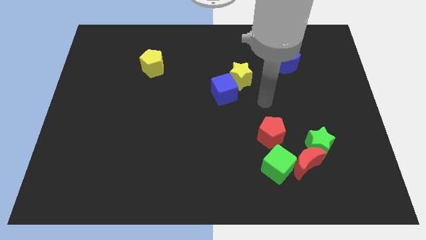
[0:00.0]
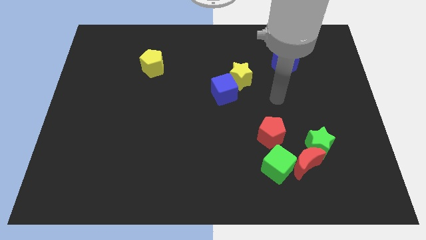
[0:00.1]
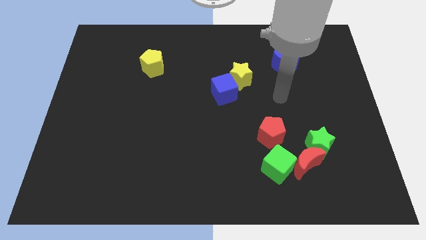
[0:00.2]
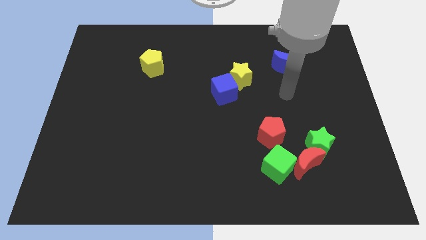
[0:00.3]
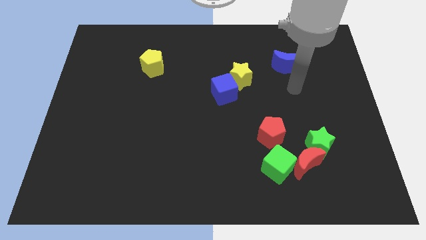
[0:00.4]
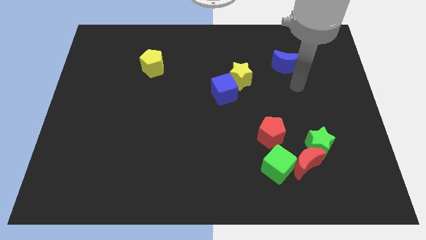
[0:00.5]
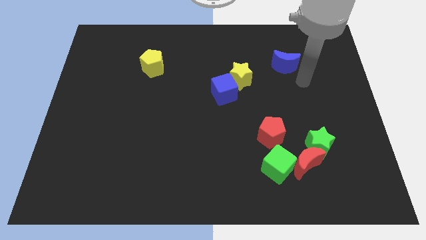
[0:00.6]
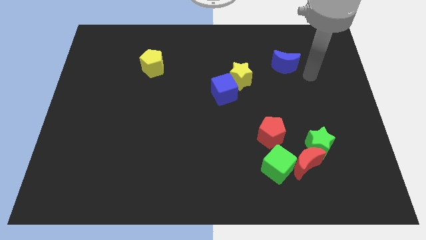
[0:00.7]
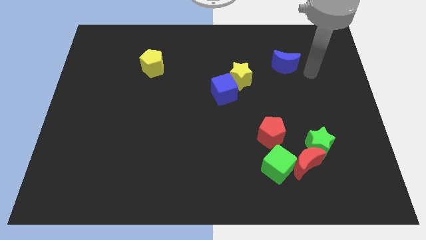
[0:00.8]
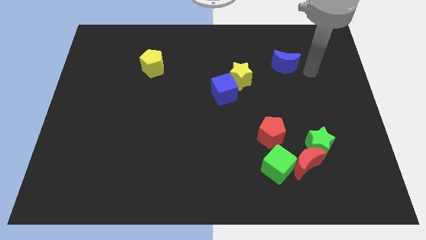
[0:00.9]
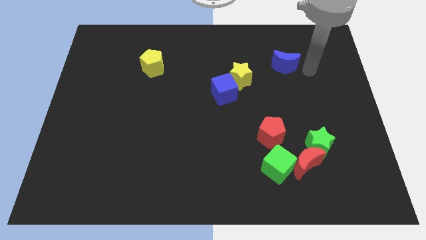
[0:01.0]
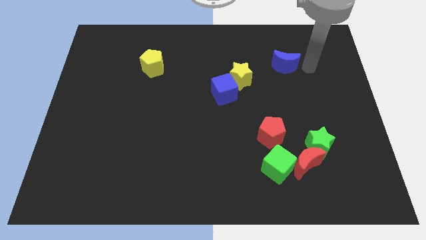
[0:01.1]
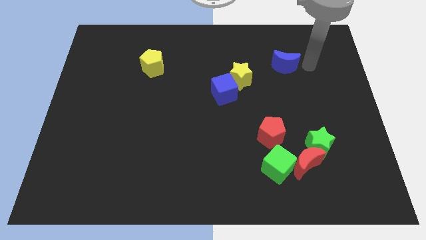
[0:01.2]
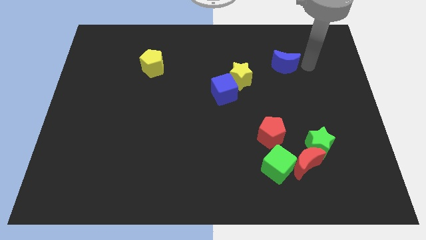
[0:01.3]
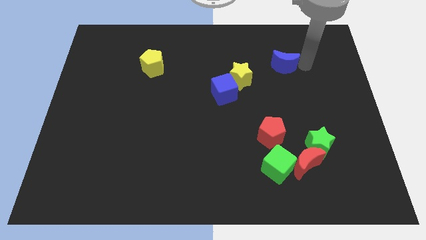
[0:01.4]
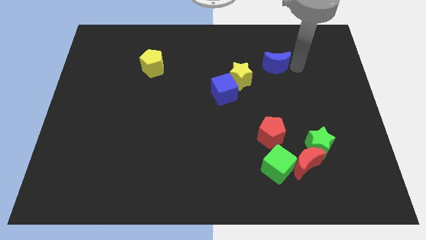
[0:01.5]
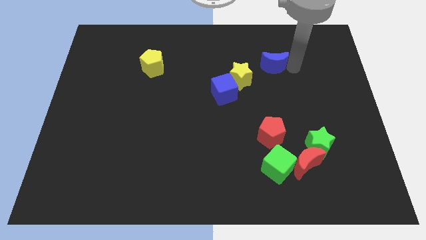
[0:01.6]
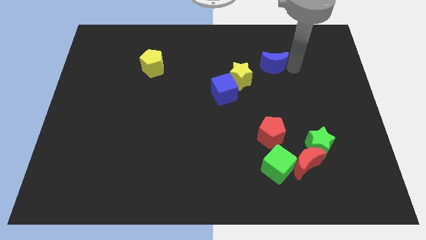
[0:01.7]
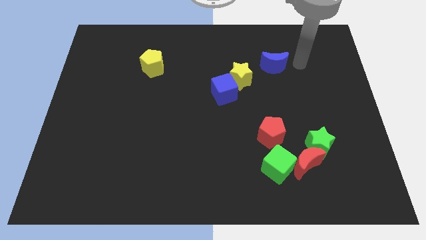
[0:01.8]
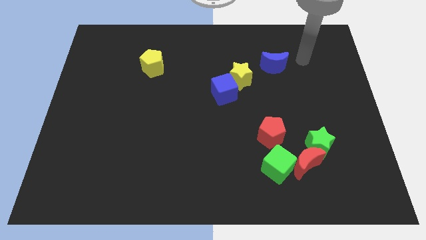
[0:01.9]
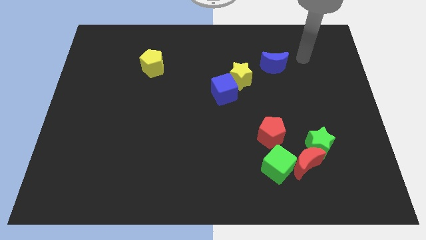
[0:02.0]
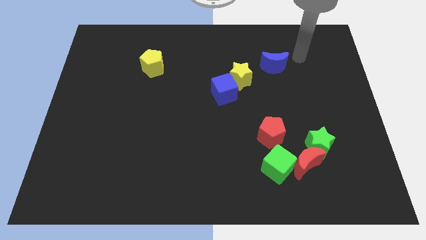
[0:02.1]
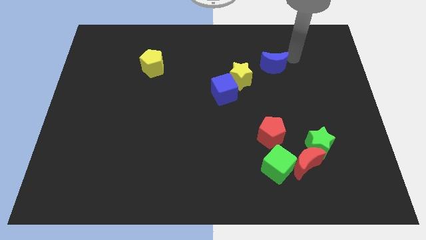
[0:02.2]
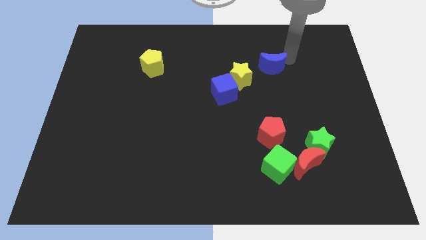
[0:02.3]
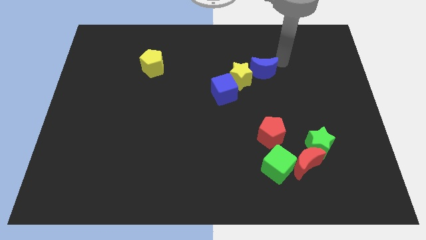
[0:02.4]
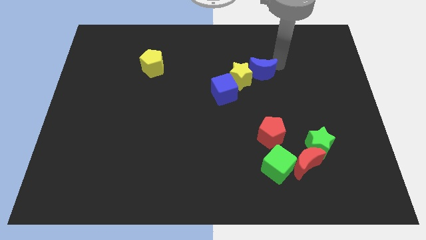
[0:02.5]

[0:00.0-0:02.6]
place the blue half moon diagonally to the top right of the yellow star

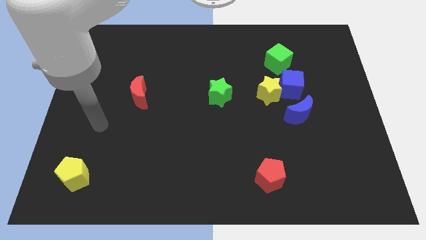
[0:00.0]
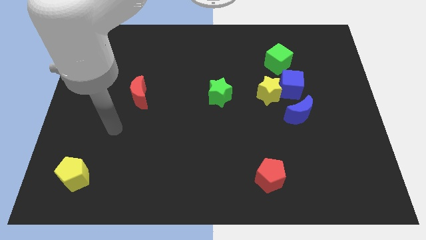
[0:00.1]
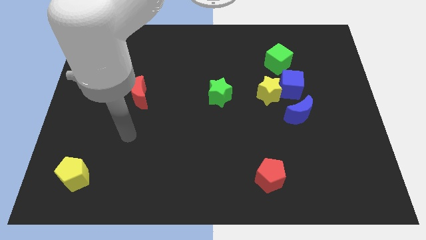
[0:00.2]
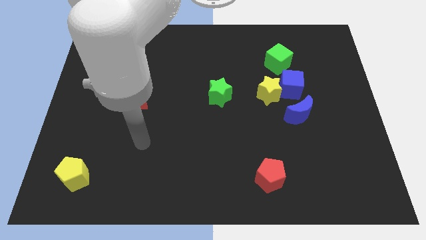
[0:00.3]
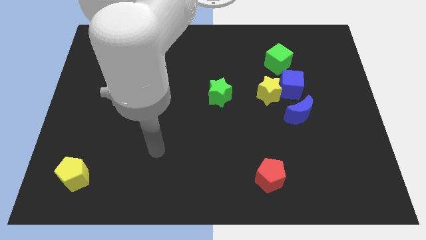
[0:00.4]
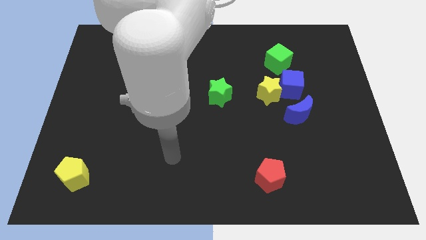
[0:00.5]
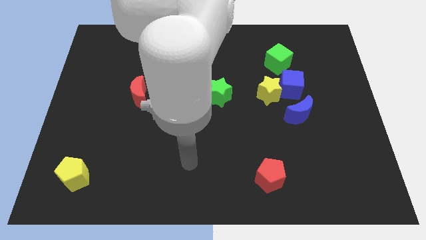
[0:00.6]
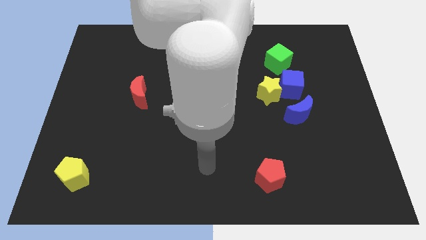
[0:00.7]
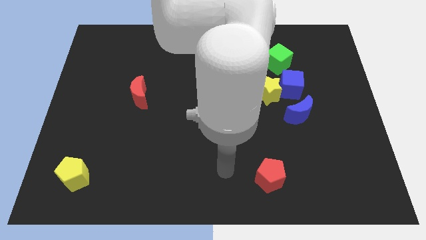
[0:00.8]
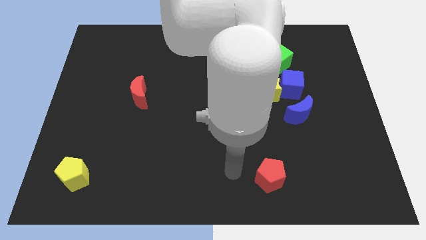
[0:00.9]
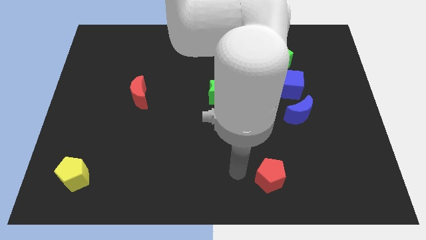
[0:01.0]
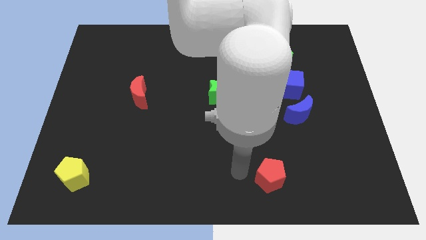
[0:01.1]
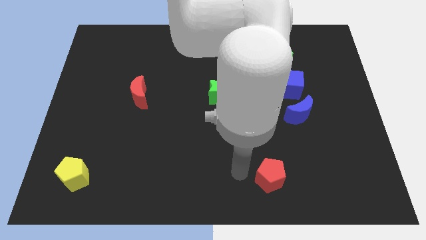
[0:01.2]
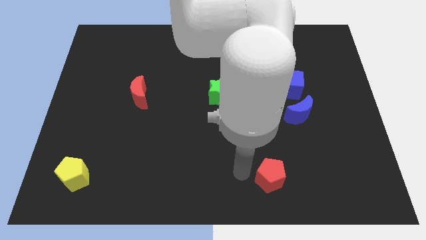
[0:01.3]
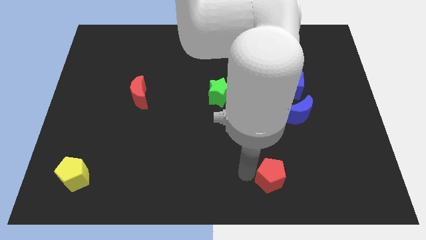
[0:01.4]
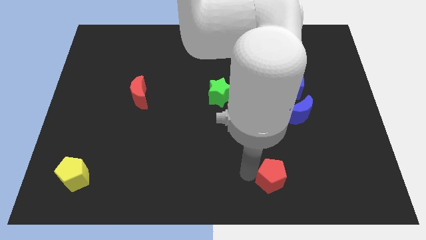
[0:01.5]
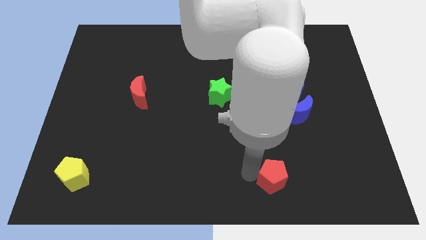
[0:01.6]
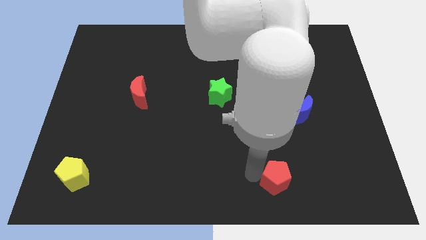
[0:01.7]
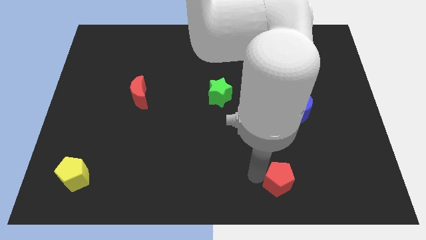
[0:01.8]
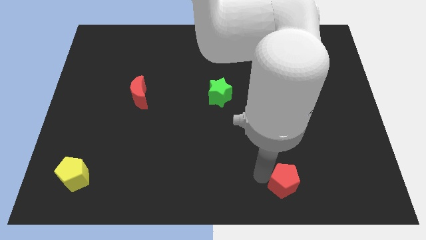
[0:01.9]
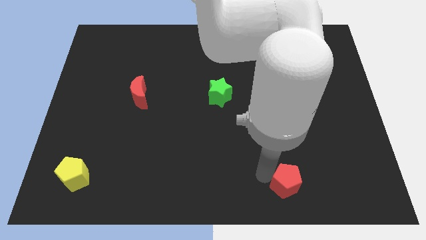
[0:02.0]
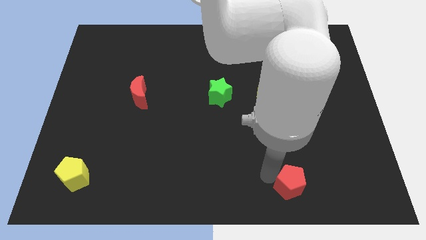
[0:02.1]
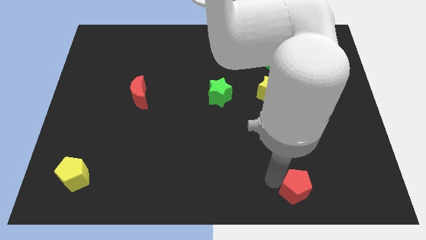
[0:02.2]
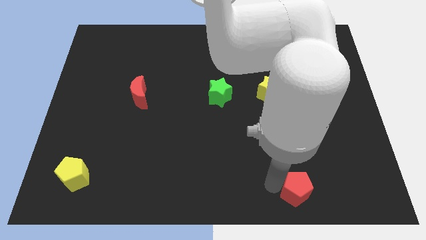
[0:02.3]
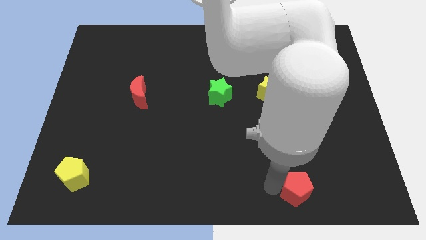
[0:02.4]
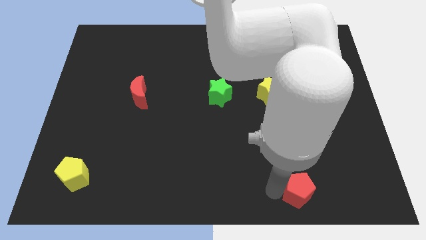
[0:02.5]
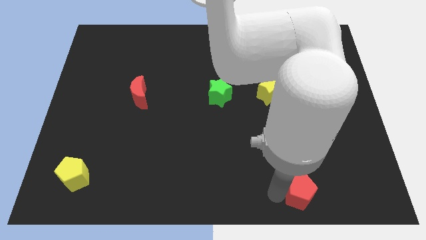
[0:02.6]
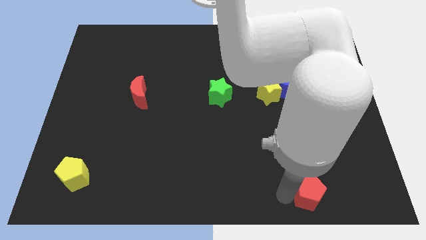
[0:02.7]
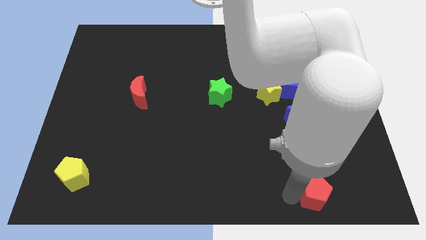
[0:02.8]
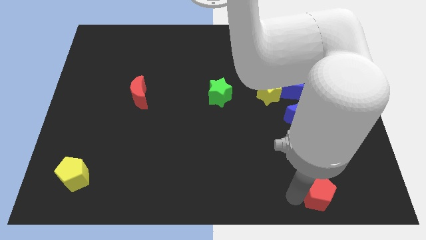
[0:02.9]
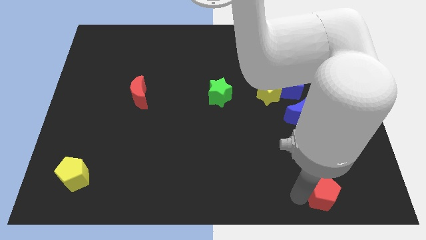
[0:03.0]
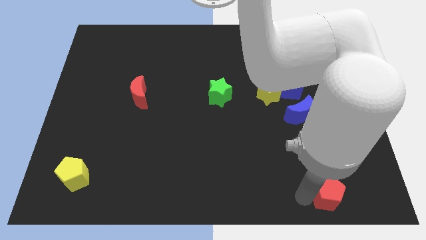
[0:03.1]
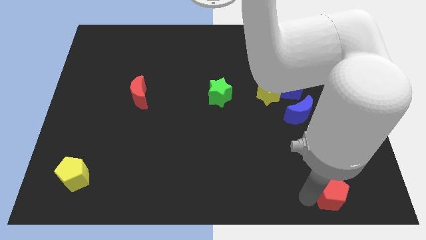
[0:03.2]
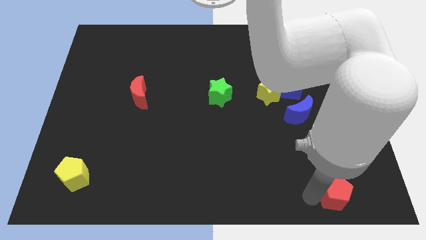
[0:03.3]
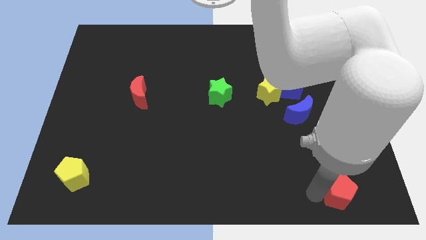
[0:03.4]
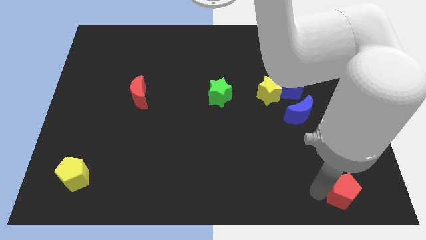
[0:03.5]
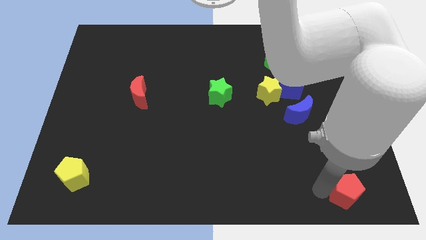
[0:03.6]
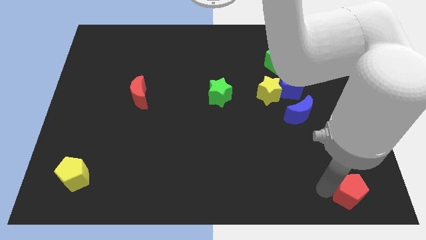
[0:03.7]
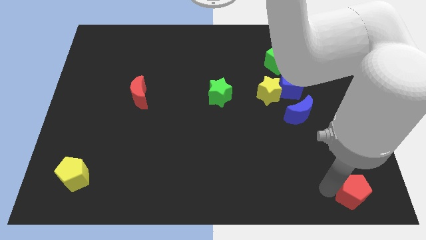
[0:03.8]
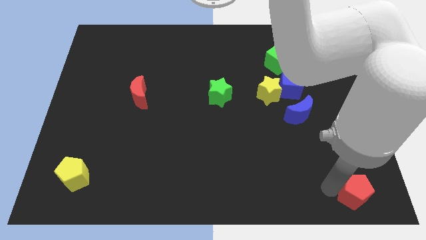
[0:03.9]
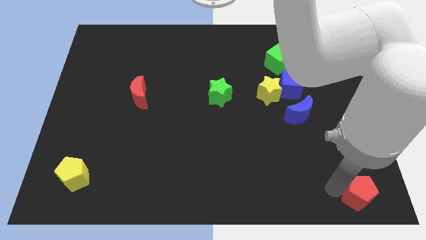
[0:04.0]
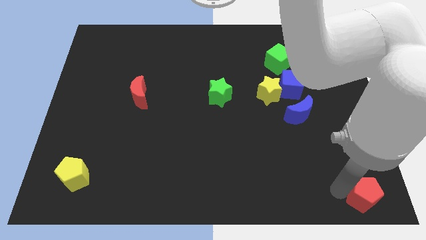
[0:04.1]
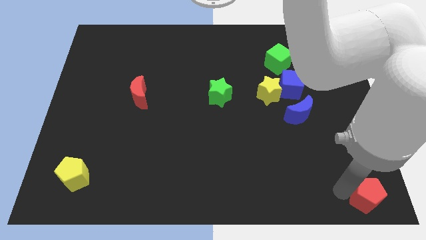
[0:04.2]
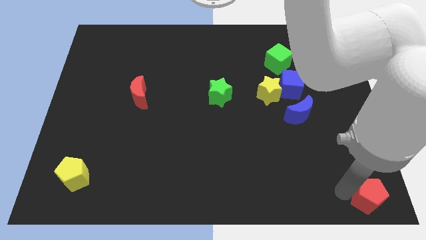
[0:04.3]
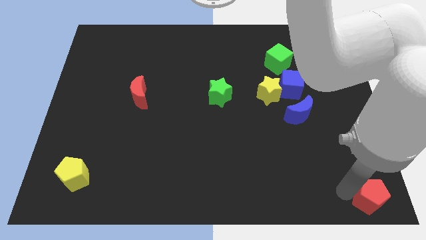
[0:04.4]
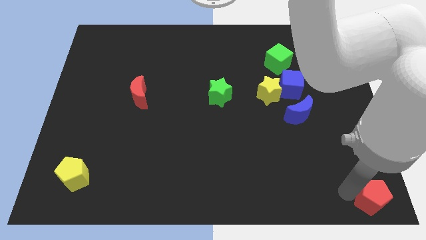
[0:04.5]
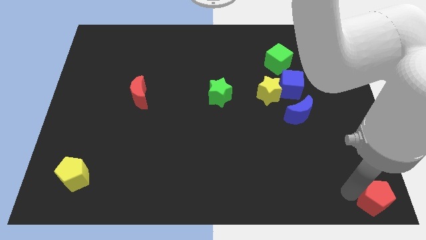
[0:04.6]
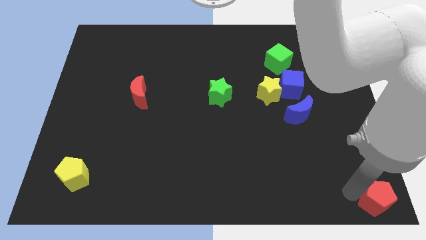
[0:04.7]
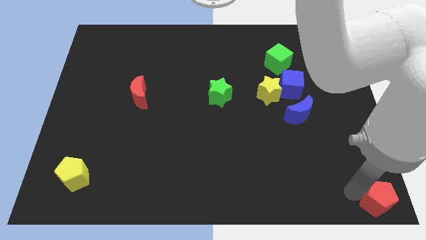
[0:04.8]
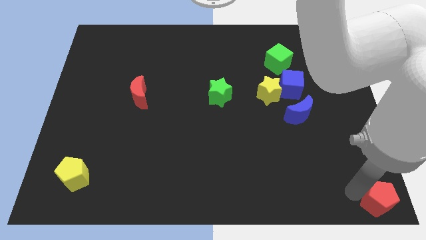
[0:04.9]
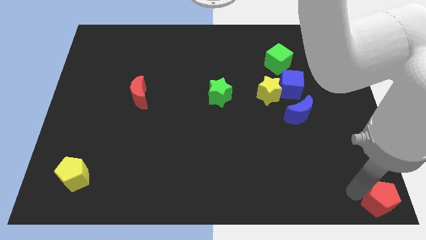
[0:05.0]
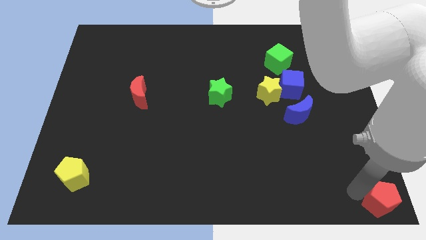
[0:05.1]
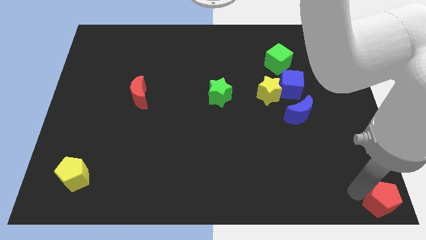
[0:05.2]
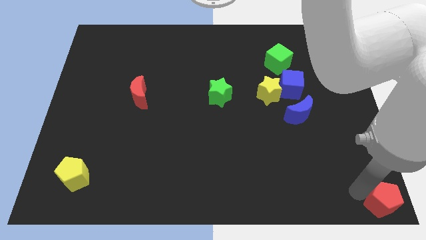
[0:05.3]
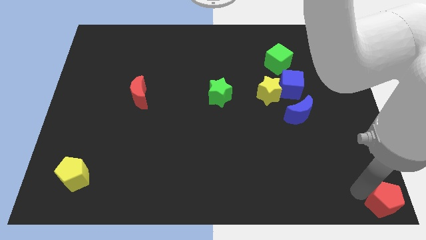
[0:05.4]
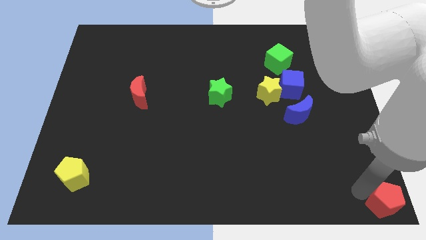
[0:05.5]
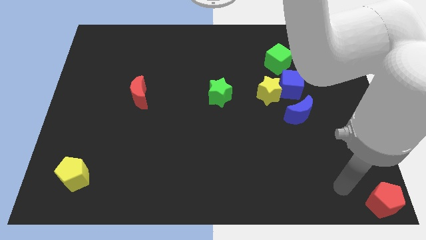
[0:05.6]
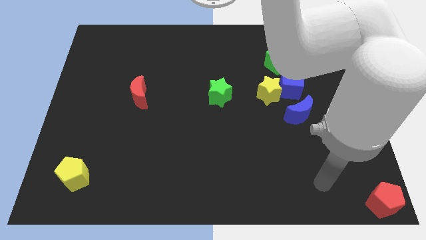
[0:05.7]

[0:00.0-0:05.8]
place the red pentagon to the bottom right corner of the board

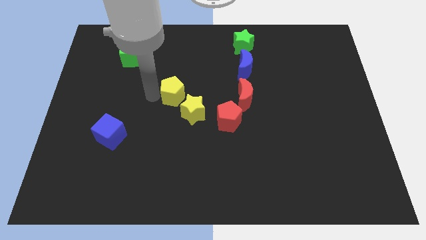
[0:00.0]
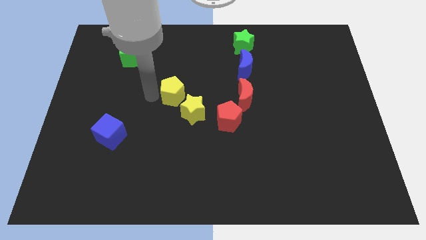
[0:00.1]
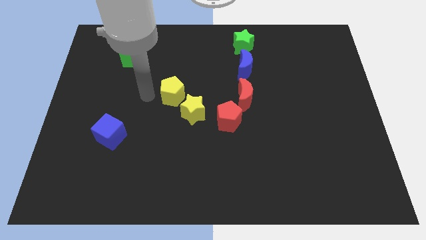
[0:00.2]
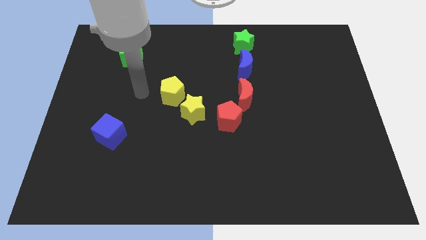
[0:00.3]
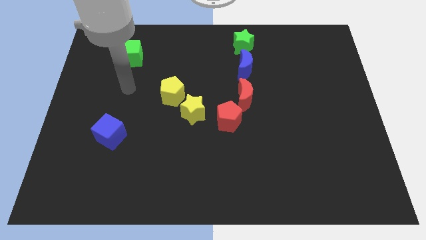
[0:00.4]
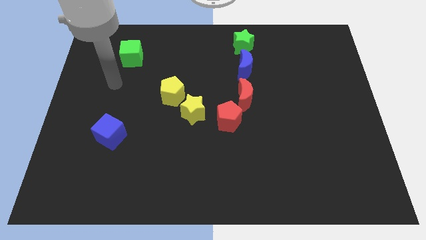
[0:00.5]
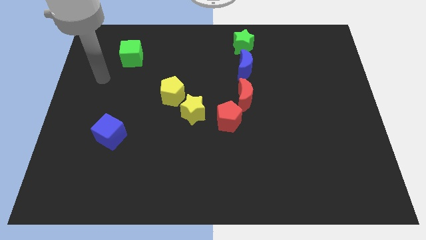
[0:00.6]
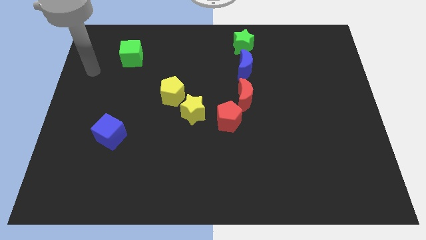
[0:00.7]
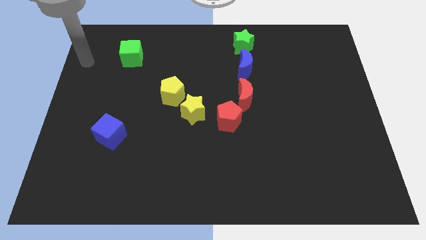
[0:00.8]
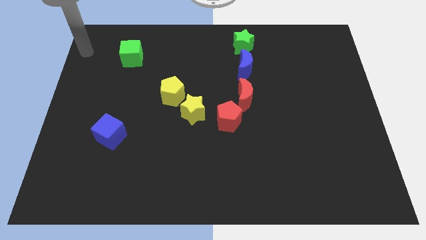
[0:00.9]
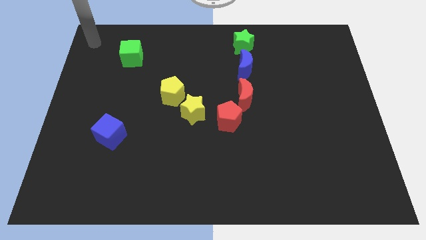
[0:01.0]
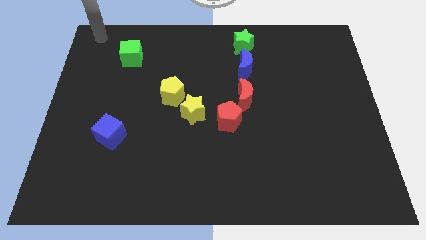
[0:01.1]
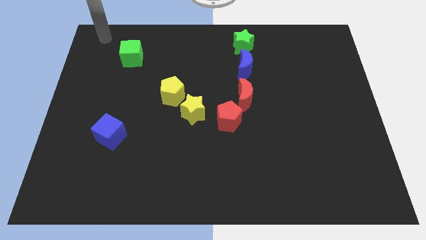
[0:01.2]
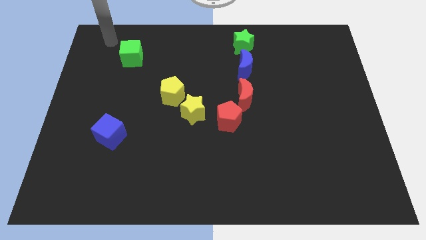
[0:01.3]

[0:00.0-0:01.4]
move your arm away from the yellow pentagon
